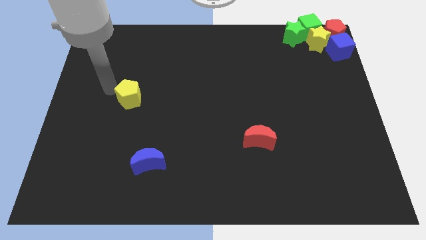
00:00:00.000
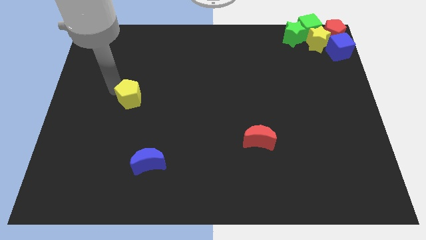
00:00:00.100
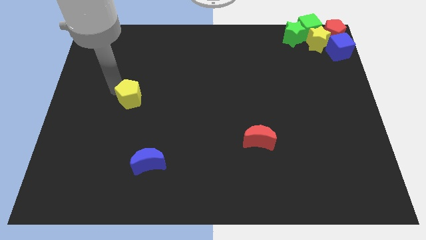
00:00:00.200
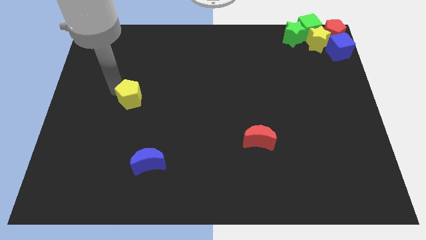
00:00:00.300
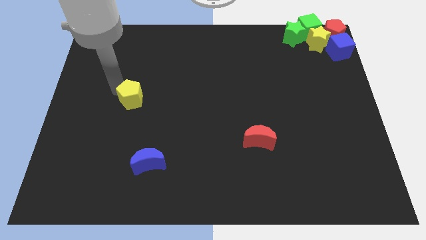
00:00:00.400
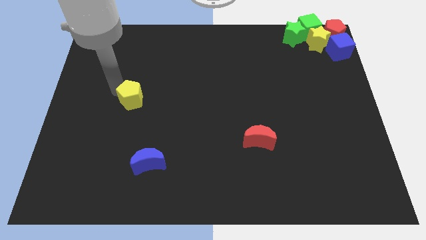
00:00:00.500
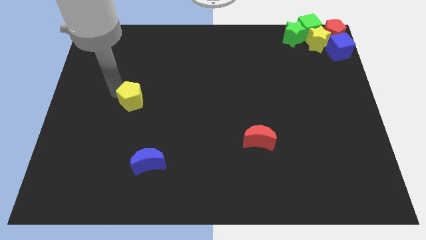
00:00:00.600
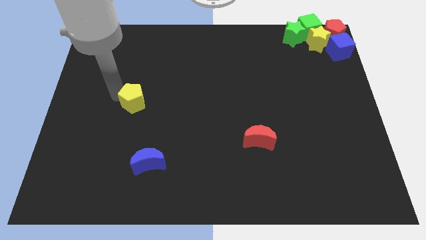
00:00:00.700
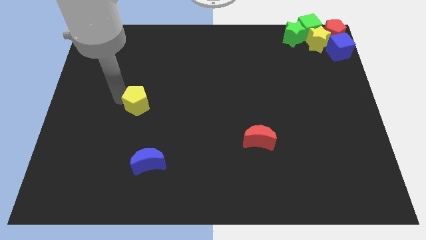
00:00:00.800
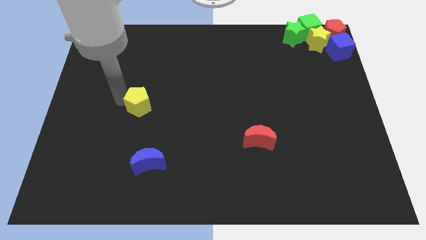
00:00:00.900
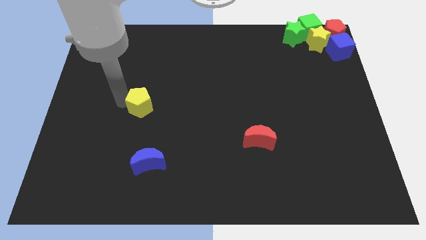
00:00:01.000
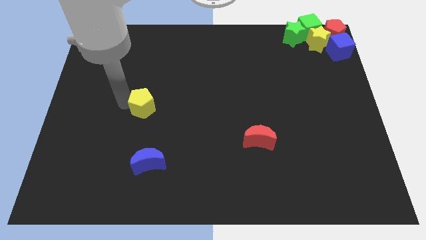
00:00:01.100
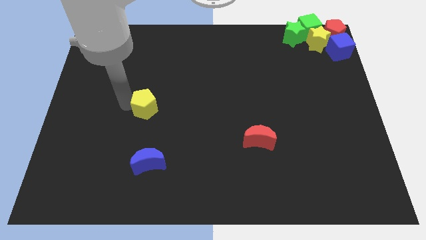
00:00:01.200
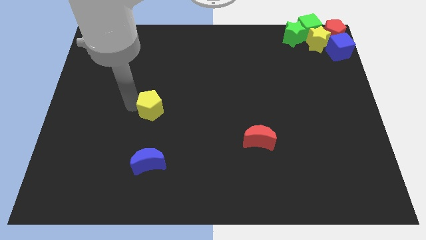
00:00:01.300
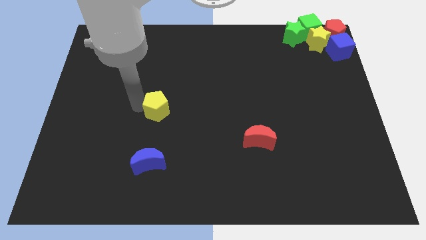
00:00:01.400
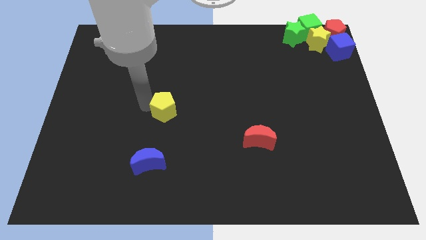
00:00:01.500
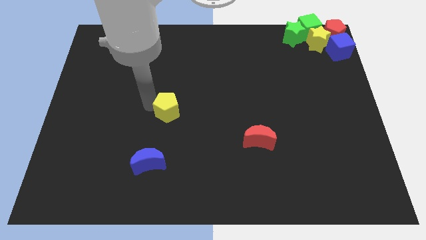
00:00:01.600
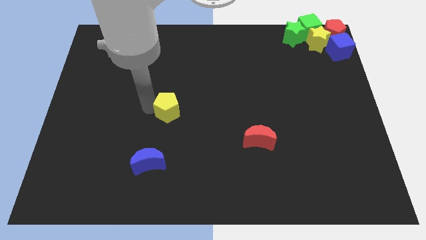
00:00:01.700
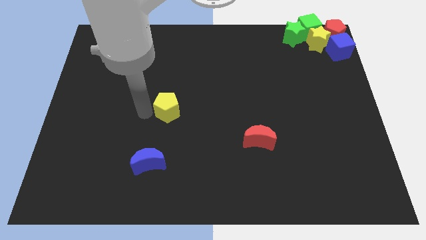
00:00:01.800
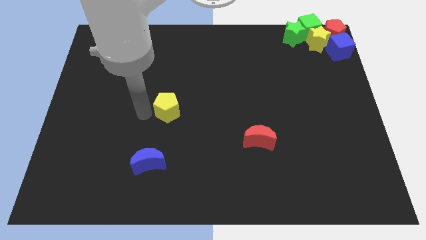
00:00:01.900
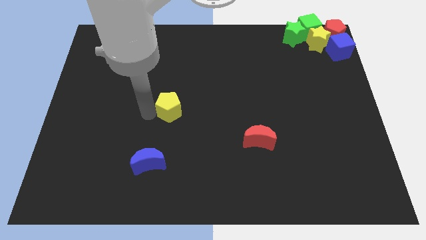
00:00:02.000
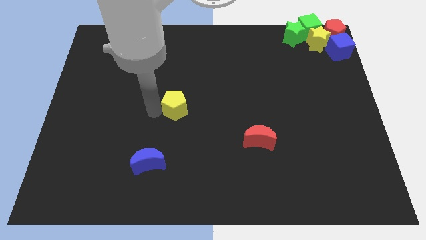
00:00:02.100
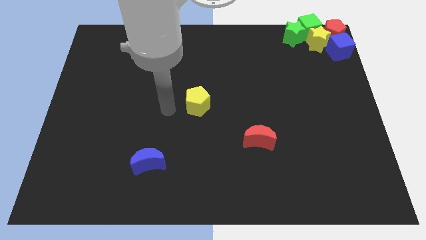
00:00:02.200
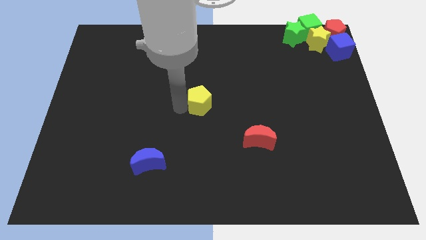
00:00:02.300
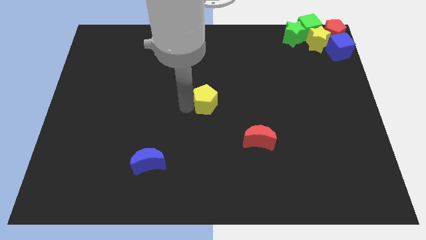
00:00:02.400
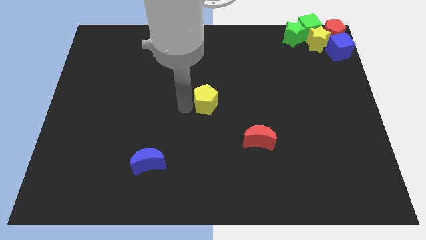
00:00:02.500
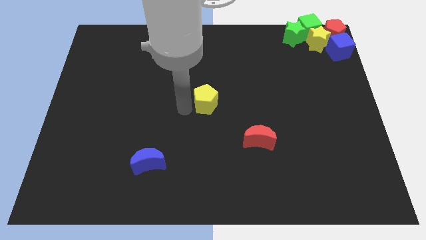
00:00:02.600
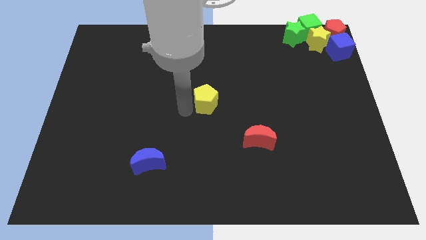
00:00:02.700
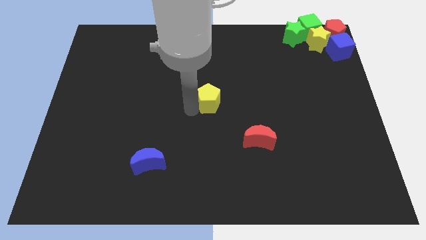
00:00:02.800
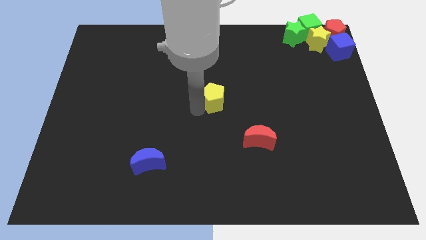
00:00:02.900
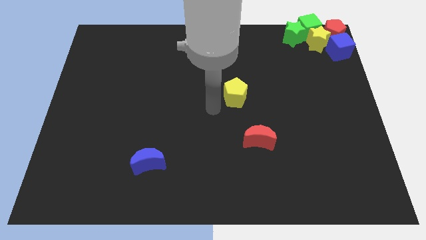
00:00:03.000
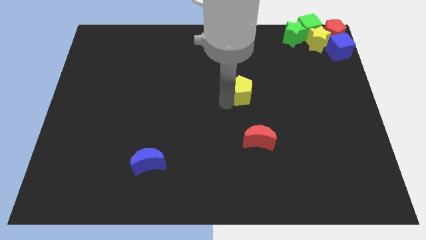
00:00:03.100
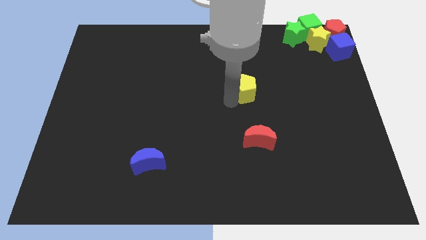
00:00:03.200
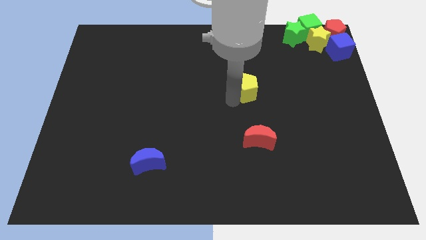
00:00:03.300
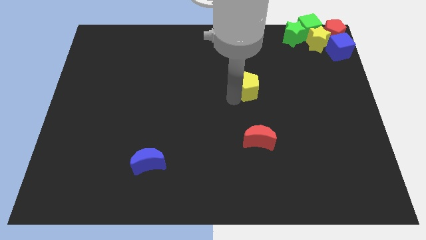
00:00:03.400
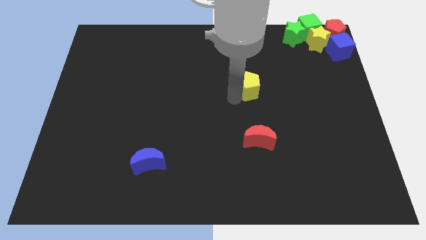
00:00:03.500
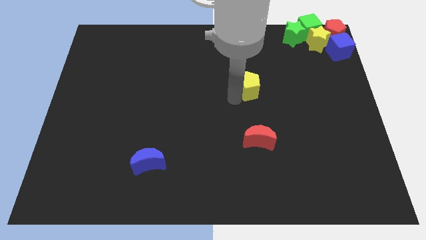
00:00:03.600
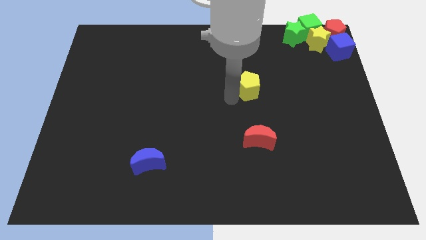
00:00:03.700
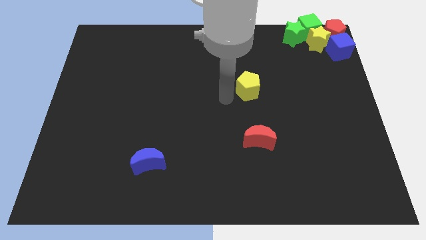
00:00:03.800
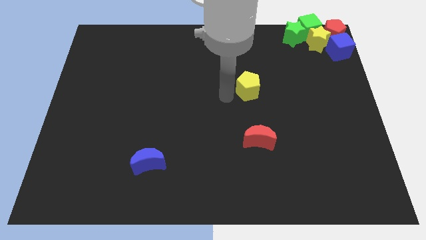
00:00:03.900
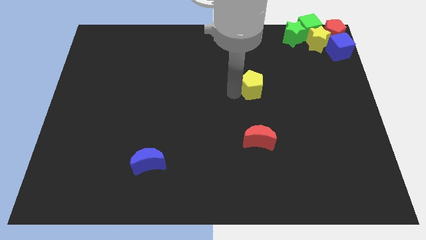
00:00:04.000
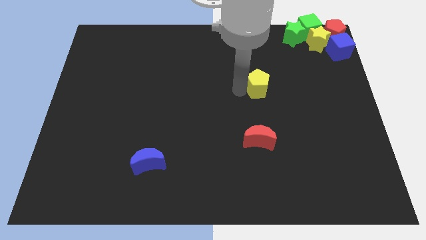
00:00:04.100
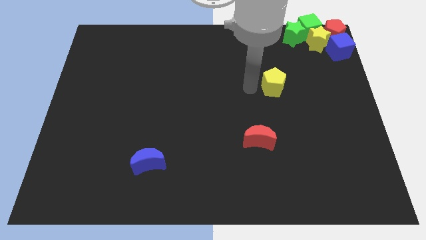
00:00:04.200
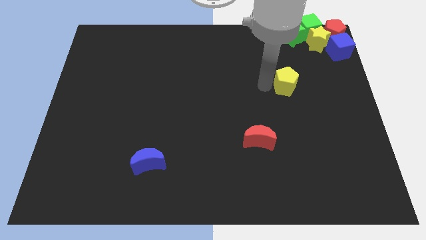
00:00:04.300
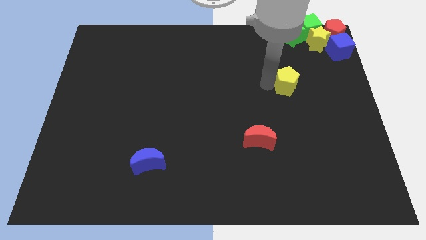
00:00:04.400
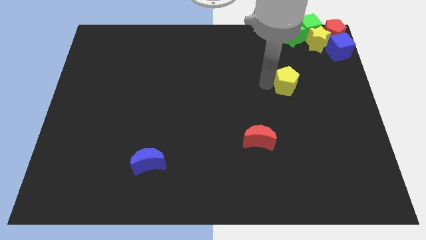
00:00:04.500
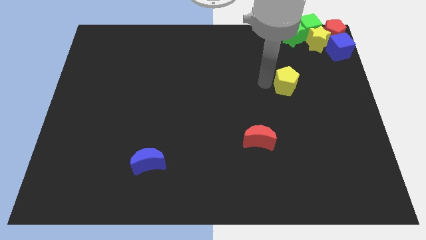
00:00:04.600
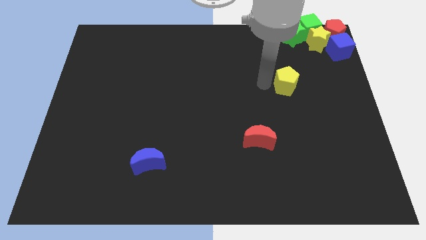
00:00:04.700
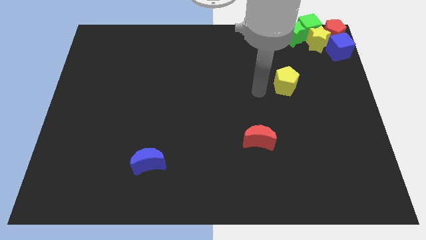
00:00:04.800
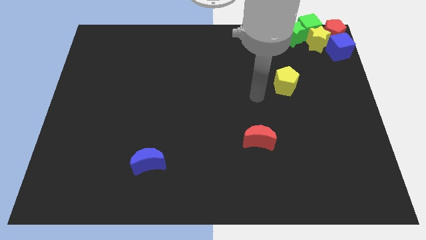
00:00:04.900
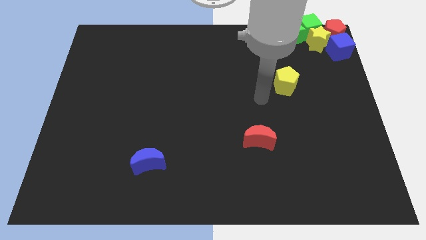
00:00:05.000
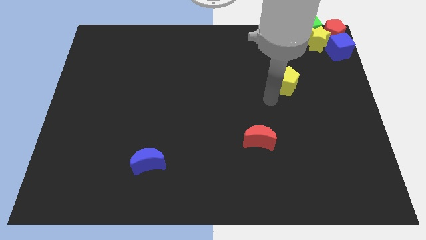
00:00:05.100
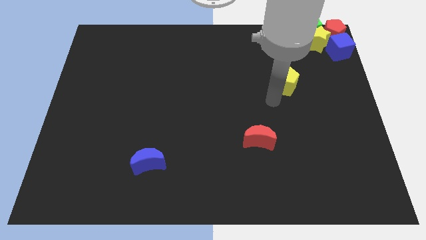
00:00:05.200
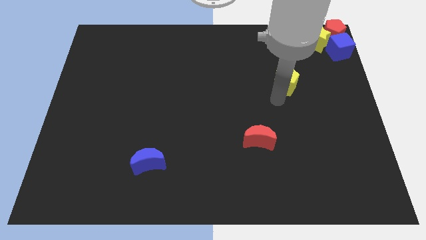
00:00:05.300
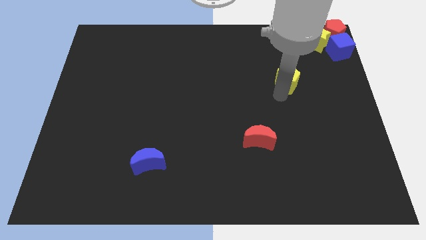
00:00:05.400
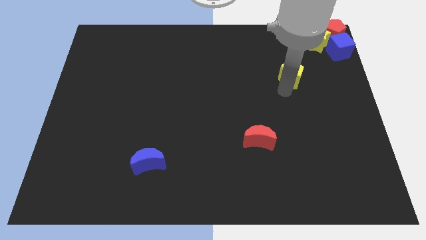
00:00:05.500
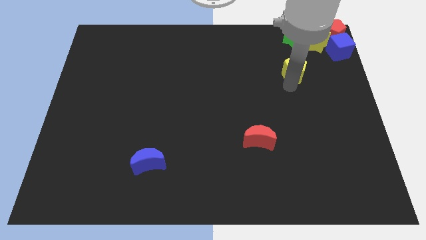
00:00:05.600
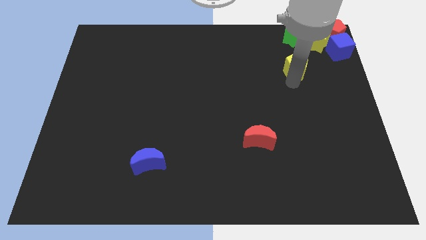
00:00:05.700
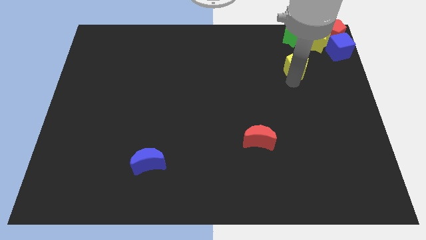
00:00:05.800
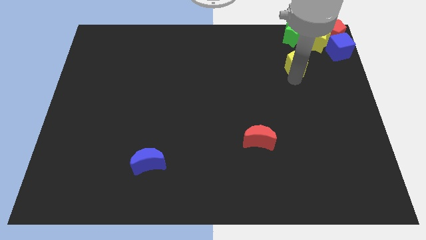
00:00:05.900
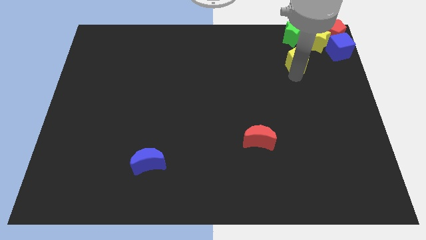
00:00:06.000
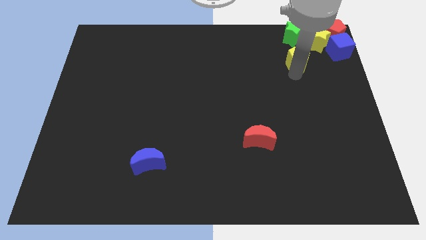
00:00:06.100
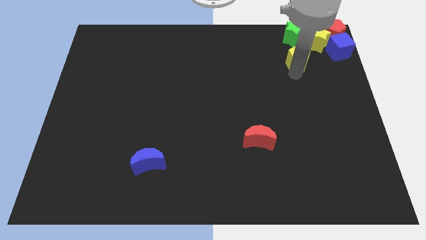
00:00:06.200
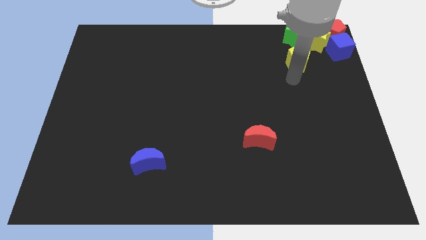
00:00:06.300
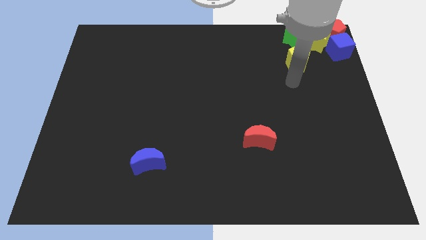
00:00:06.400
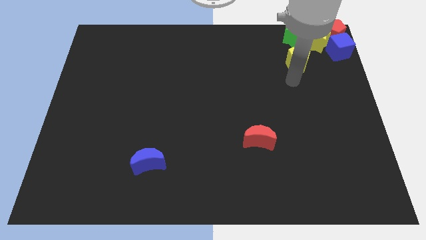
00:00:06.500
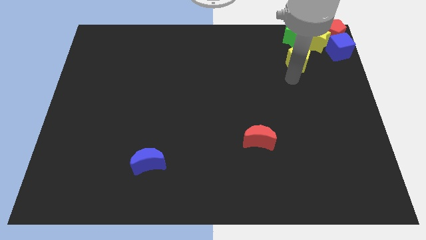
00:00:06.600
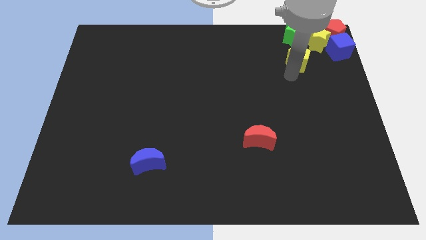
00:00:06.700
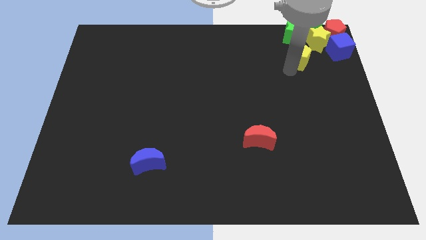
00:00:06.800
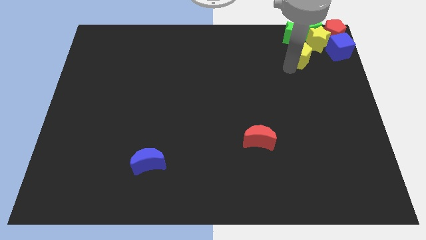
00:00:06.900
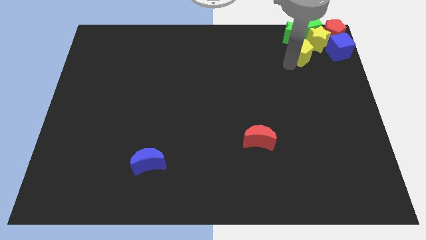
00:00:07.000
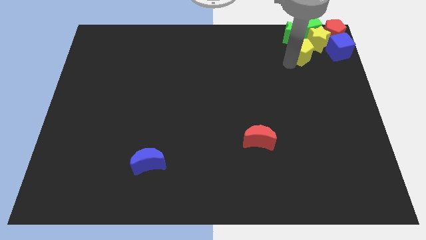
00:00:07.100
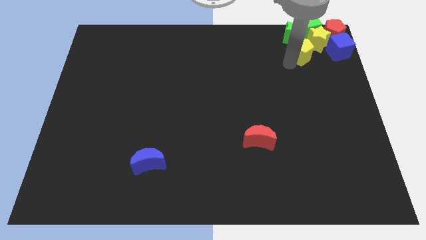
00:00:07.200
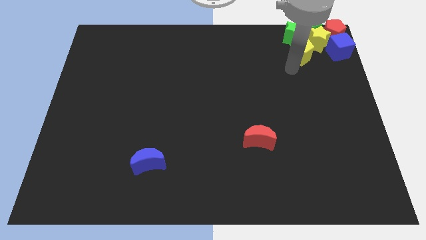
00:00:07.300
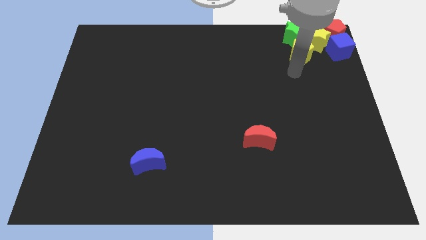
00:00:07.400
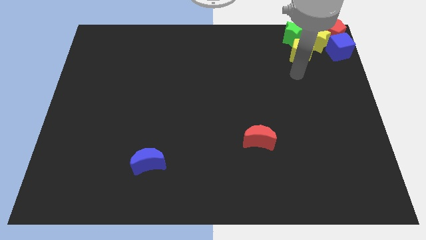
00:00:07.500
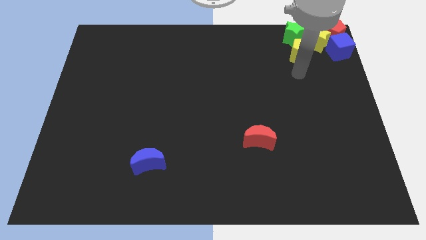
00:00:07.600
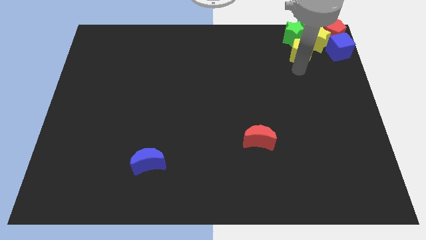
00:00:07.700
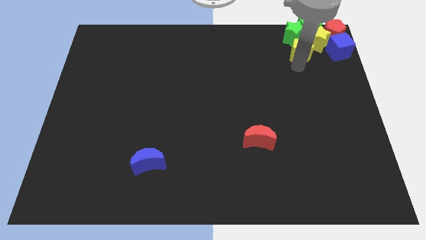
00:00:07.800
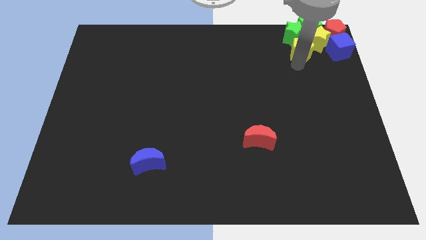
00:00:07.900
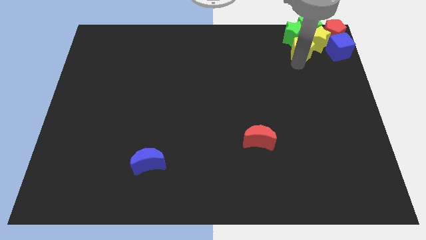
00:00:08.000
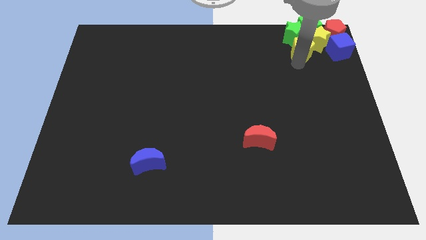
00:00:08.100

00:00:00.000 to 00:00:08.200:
push yellow pentagon into the yellow star

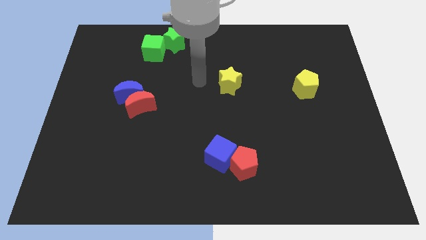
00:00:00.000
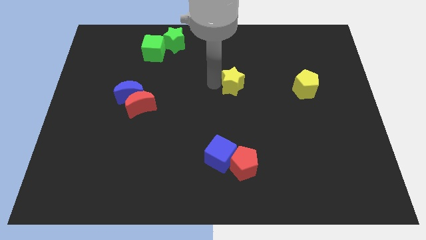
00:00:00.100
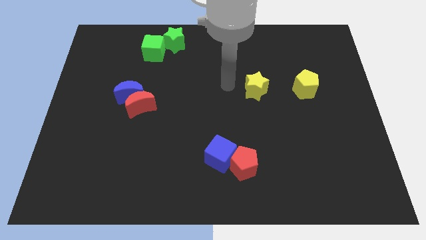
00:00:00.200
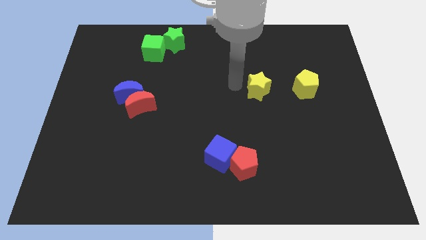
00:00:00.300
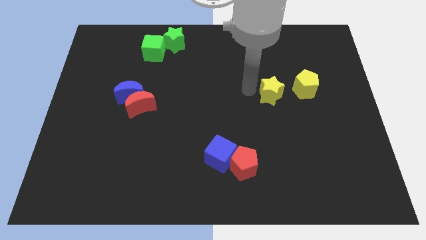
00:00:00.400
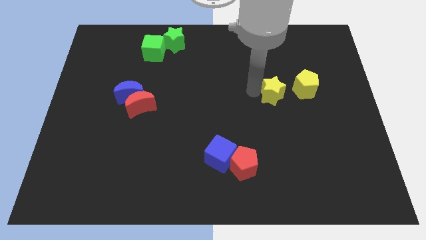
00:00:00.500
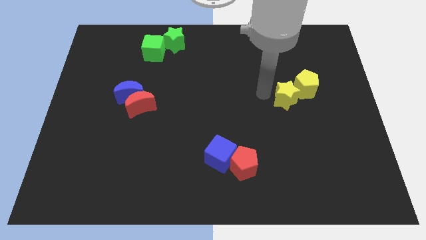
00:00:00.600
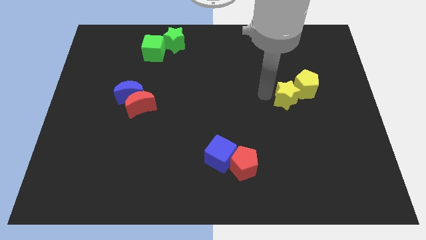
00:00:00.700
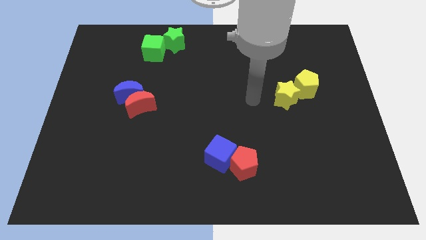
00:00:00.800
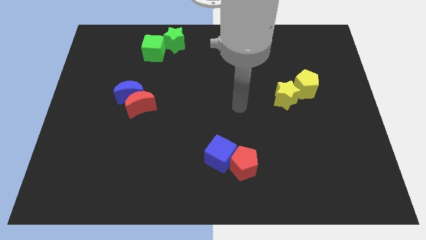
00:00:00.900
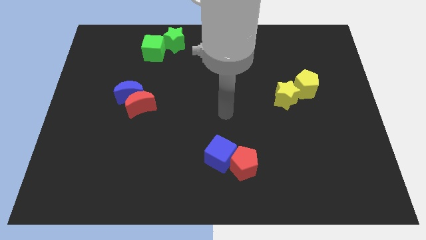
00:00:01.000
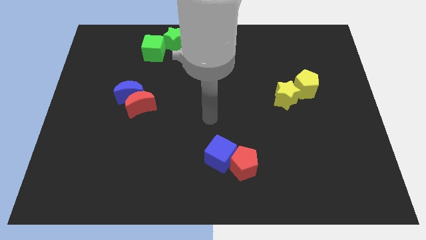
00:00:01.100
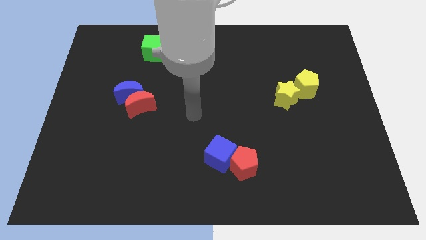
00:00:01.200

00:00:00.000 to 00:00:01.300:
place the yellow star to the diagonally left of the yellow pentagon
